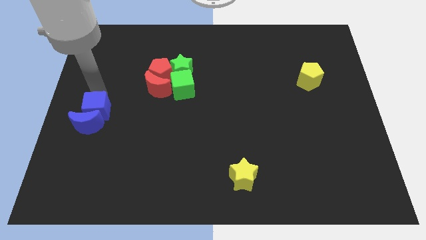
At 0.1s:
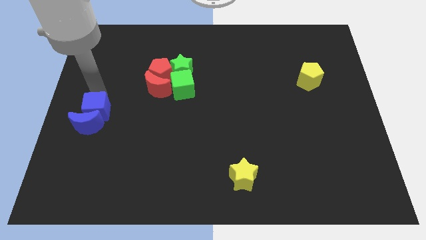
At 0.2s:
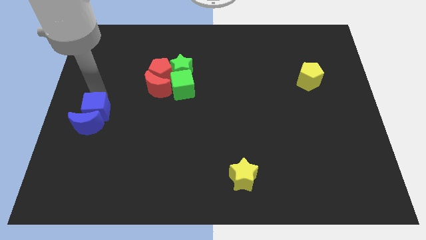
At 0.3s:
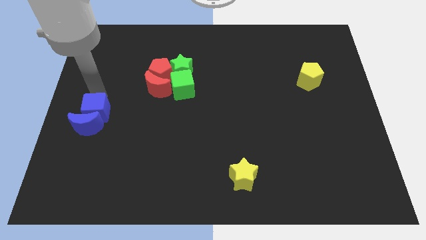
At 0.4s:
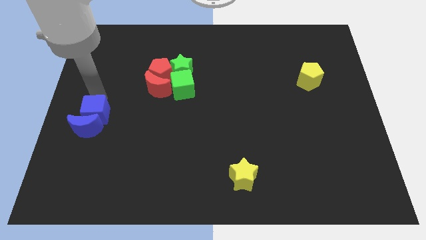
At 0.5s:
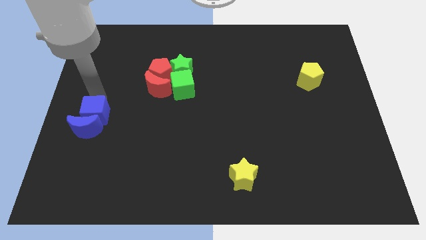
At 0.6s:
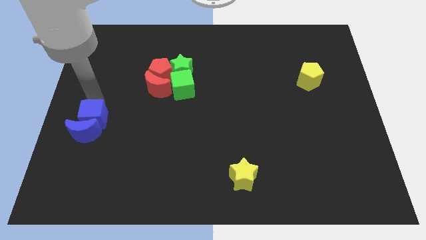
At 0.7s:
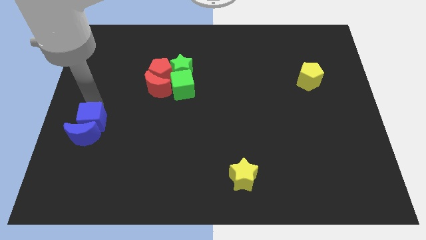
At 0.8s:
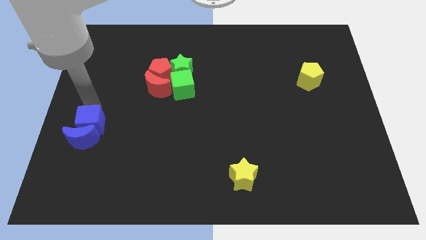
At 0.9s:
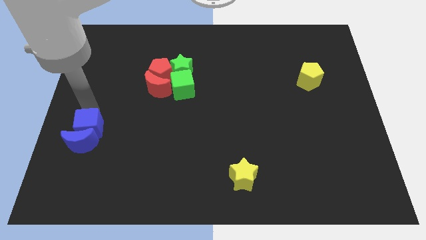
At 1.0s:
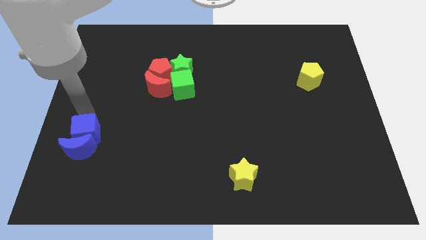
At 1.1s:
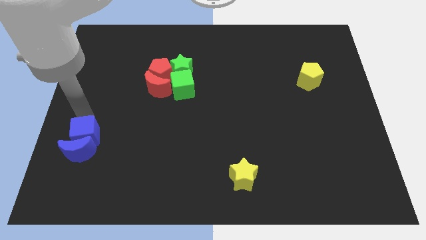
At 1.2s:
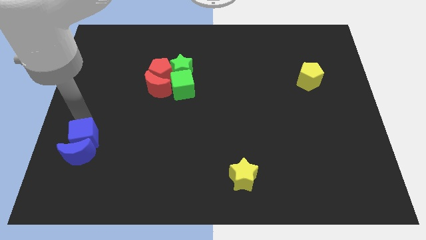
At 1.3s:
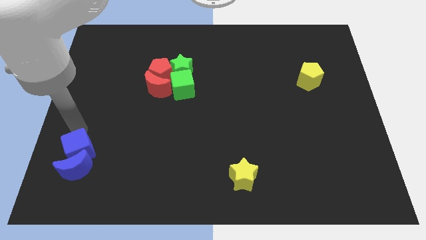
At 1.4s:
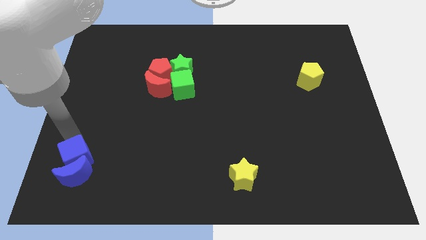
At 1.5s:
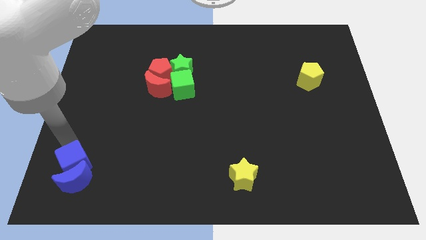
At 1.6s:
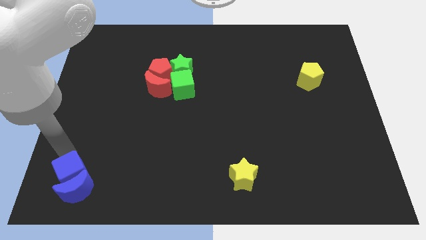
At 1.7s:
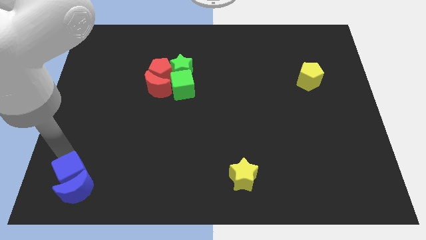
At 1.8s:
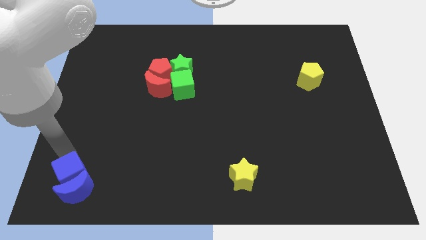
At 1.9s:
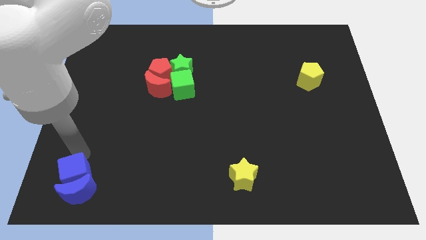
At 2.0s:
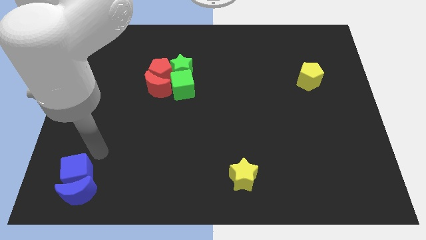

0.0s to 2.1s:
push the blue blocks towards the bottom of the board

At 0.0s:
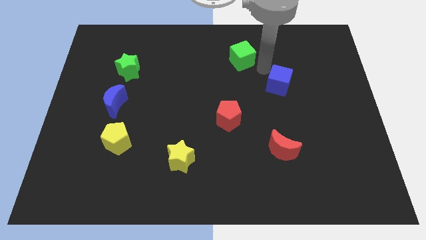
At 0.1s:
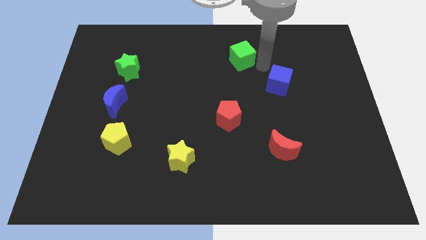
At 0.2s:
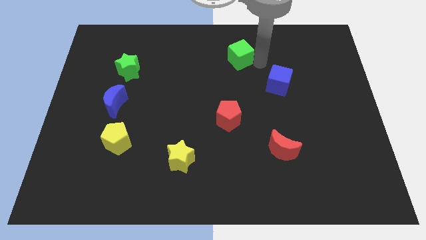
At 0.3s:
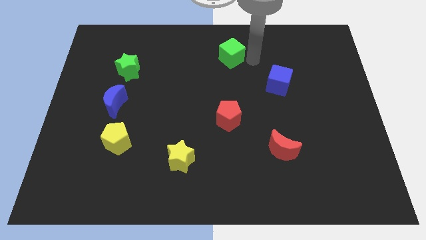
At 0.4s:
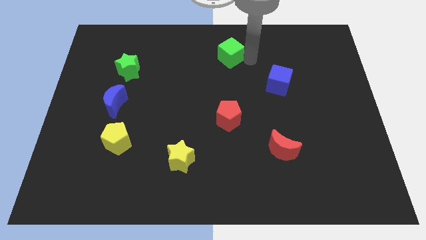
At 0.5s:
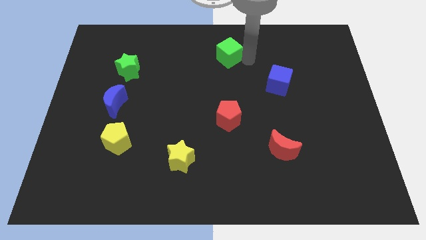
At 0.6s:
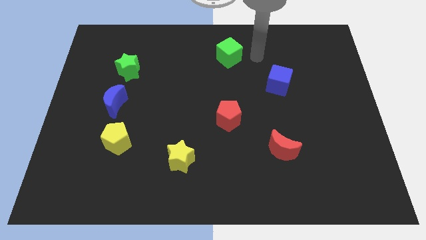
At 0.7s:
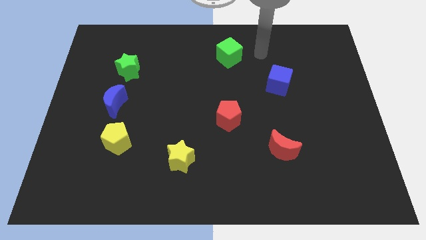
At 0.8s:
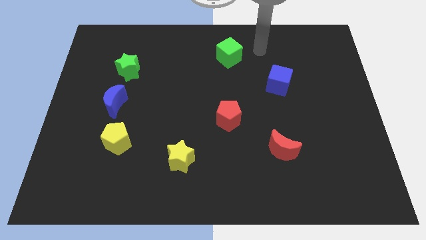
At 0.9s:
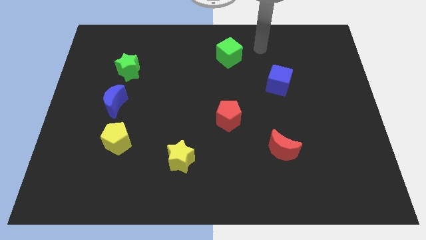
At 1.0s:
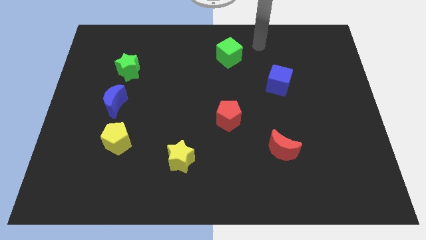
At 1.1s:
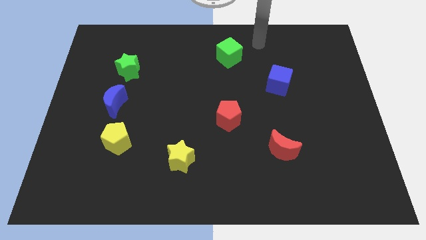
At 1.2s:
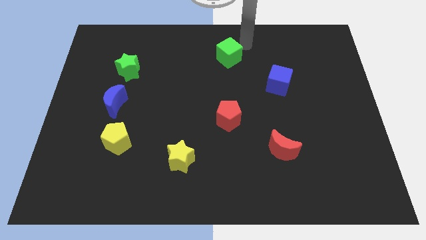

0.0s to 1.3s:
push the green cube to the top center of the board

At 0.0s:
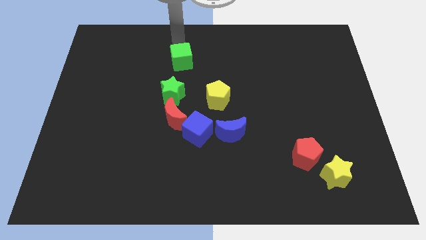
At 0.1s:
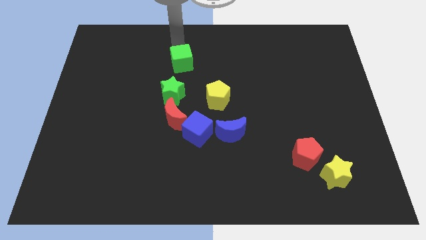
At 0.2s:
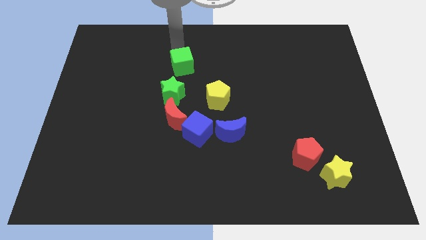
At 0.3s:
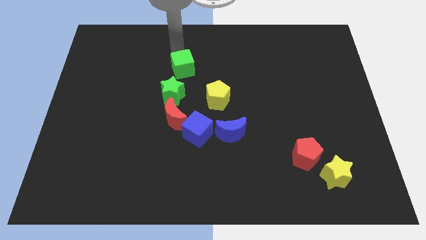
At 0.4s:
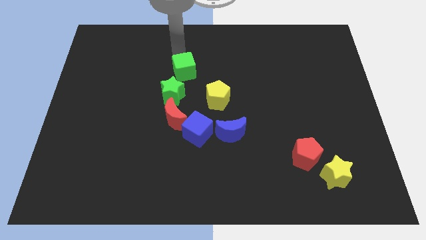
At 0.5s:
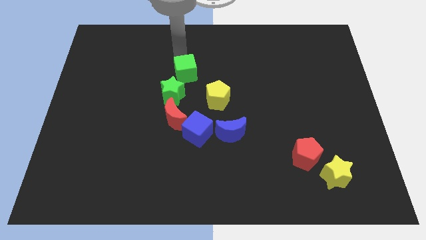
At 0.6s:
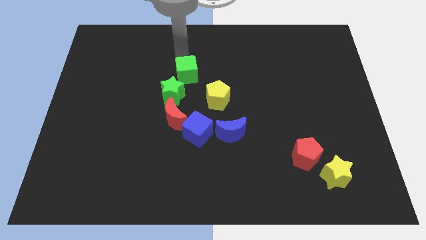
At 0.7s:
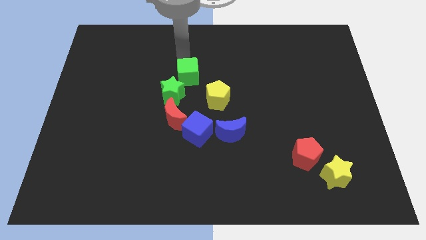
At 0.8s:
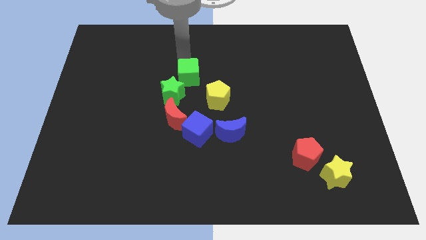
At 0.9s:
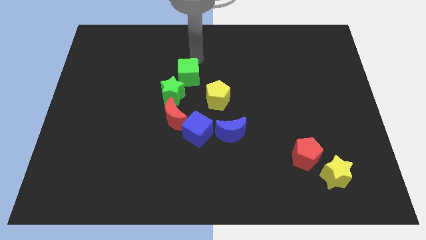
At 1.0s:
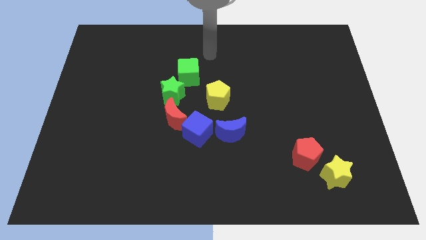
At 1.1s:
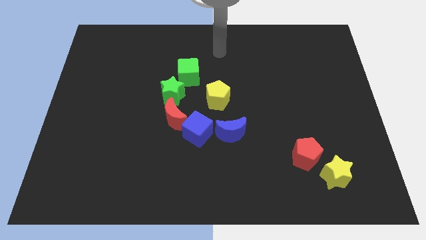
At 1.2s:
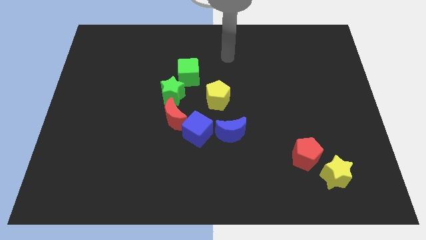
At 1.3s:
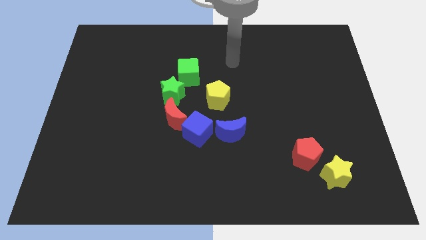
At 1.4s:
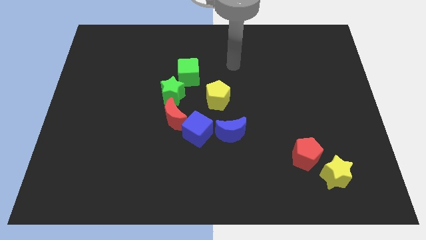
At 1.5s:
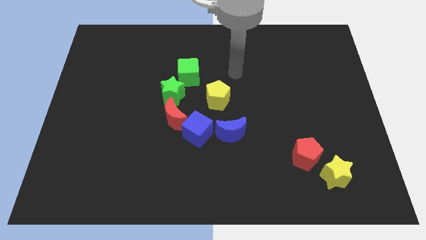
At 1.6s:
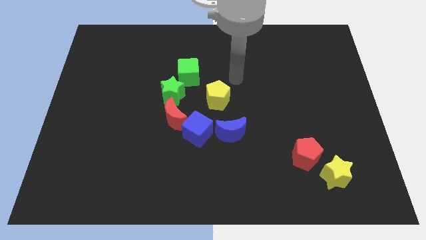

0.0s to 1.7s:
place the green cube above the green star

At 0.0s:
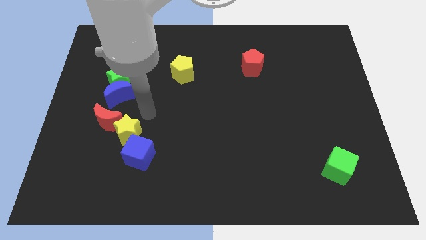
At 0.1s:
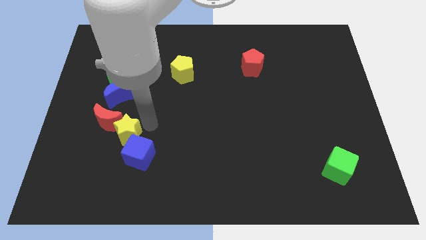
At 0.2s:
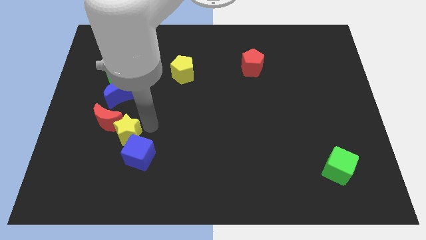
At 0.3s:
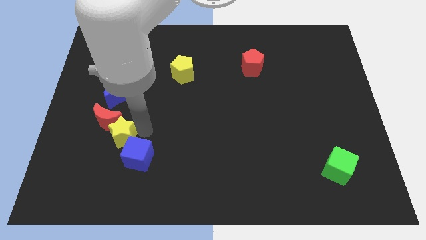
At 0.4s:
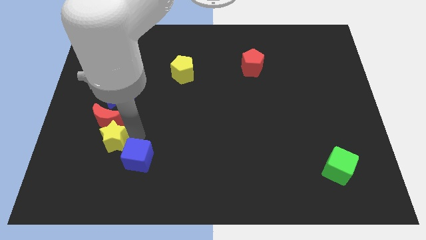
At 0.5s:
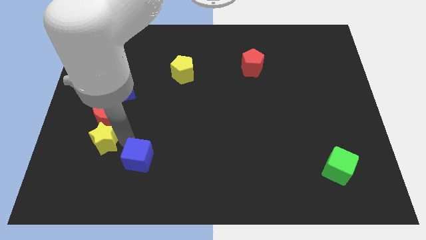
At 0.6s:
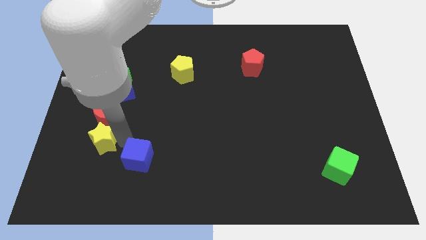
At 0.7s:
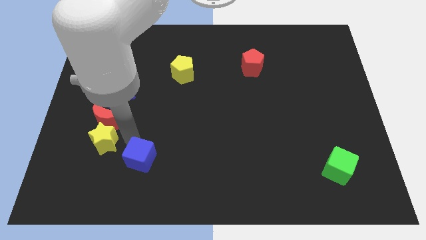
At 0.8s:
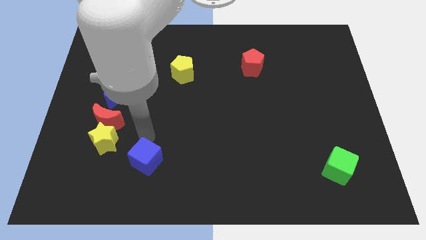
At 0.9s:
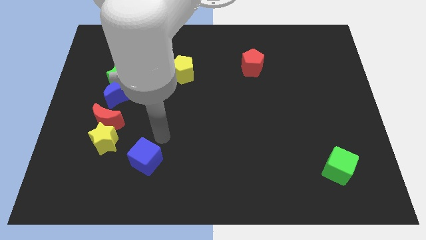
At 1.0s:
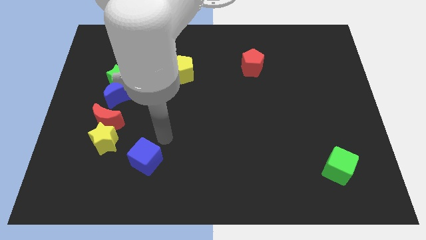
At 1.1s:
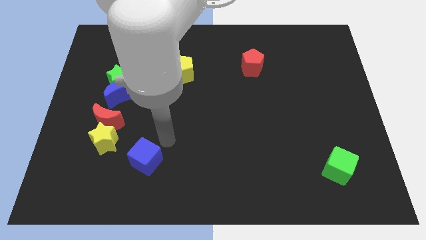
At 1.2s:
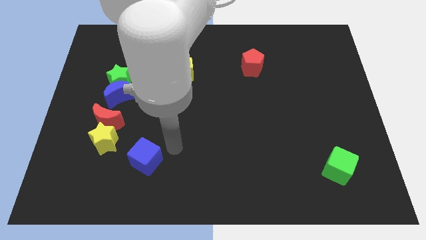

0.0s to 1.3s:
drag the yellow star to the bottom side of the red moon

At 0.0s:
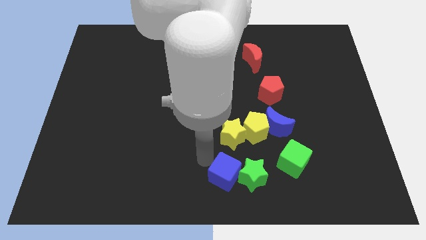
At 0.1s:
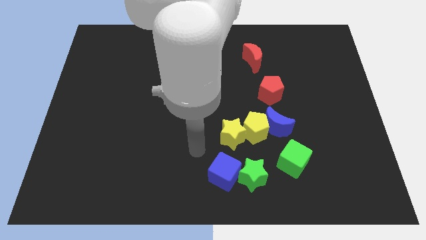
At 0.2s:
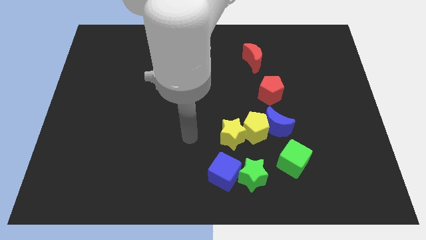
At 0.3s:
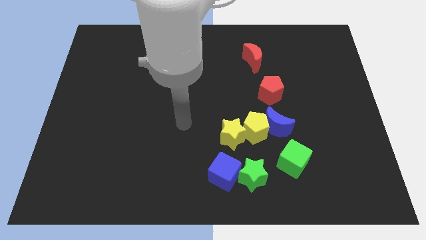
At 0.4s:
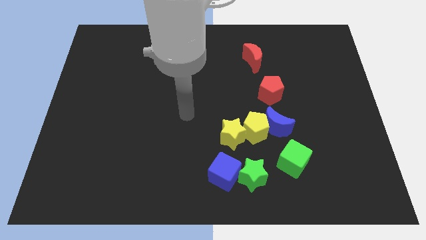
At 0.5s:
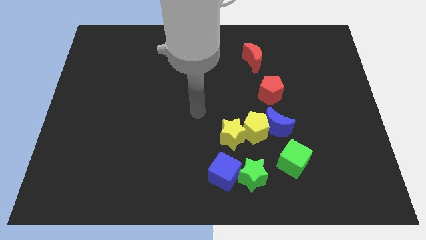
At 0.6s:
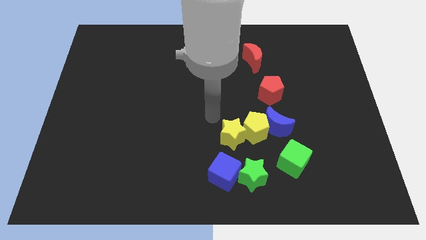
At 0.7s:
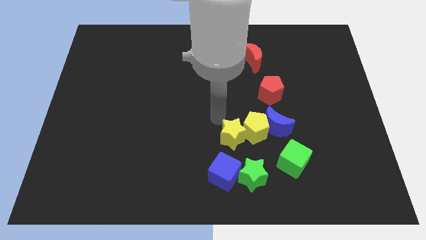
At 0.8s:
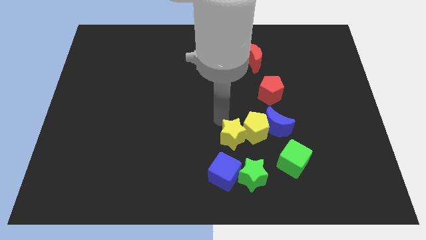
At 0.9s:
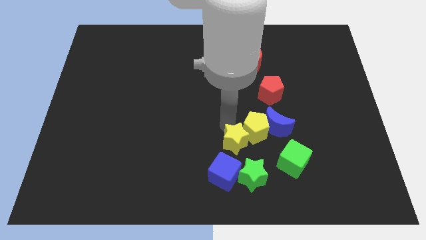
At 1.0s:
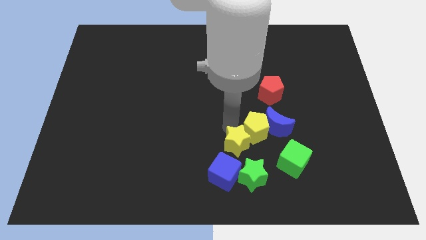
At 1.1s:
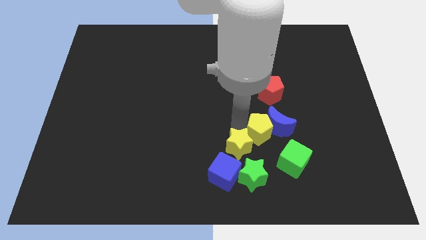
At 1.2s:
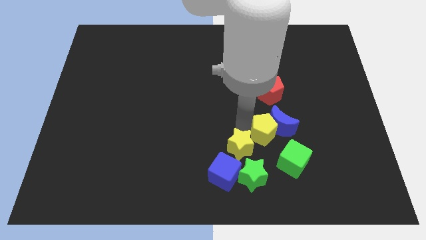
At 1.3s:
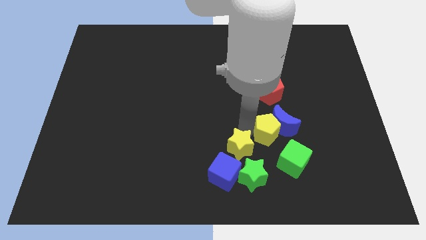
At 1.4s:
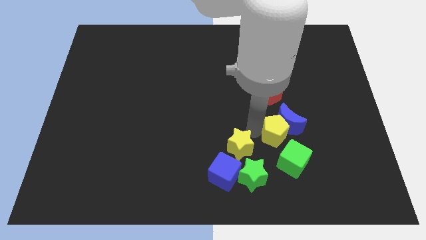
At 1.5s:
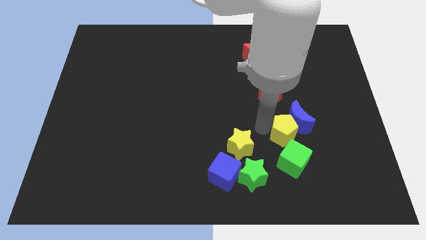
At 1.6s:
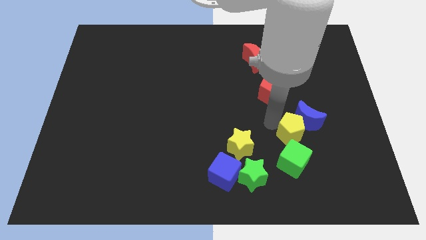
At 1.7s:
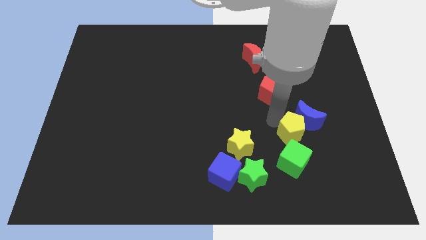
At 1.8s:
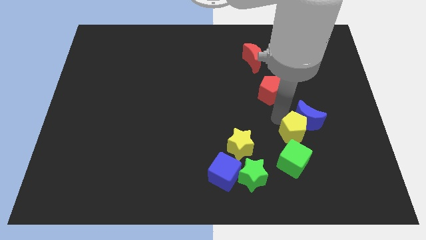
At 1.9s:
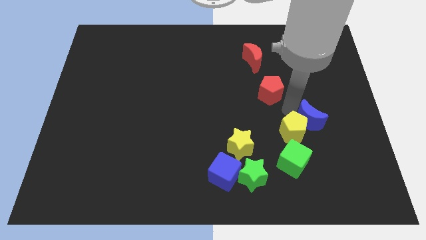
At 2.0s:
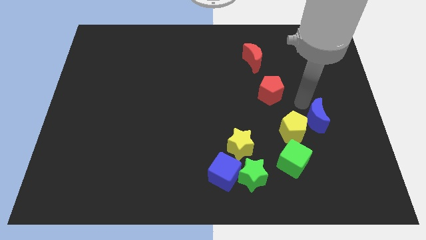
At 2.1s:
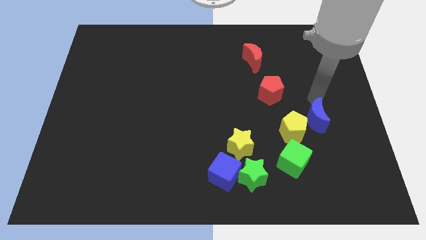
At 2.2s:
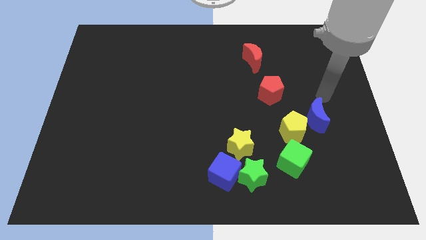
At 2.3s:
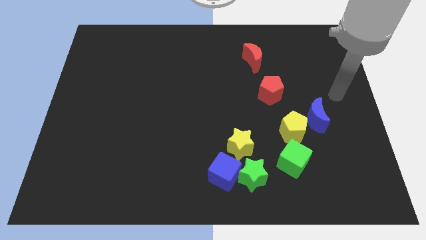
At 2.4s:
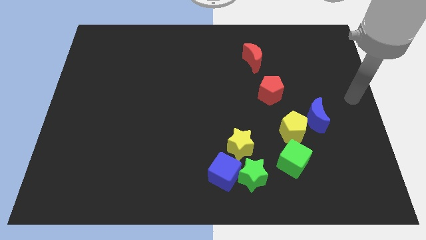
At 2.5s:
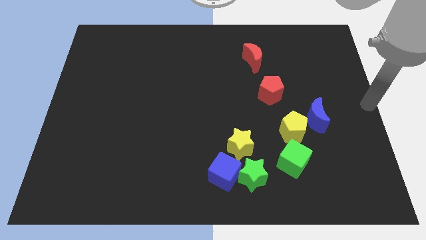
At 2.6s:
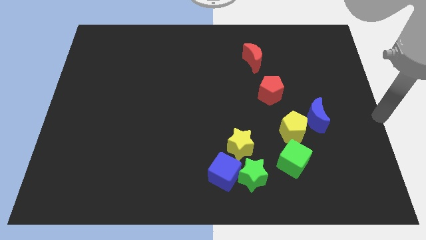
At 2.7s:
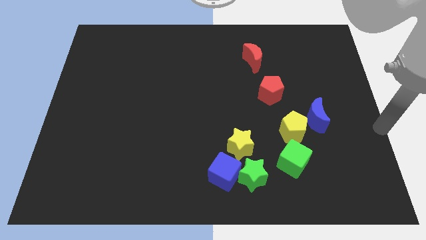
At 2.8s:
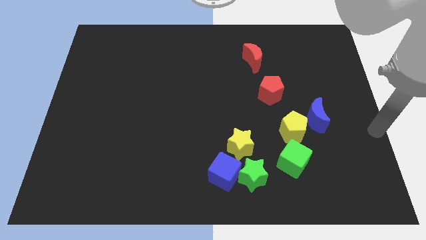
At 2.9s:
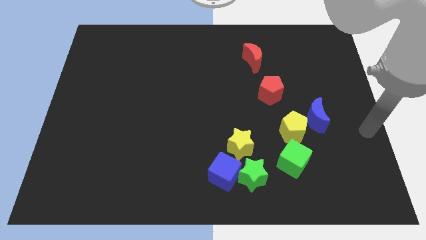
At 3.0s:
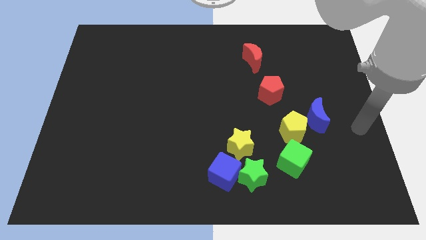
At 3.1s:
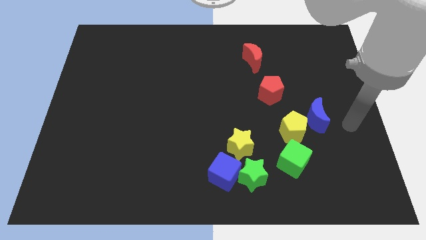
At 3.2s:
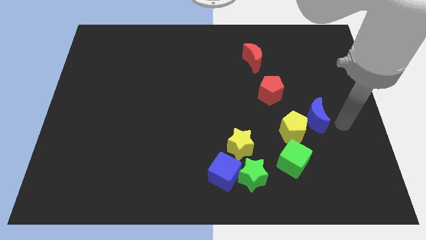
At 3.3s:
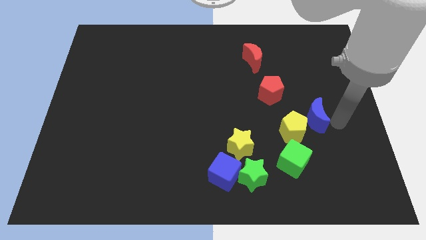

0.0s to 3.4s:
seperate yellow star and yellow pentagon
